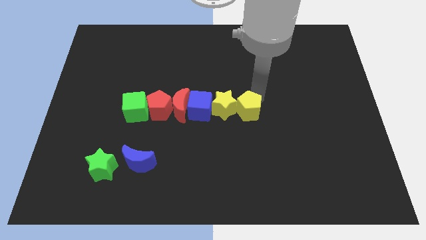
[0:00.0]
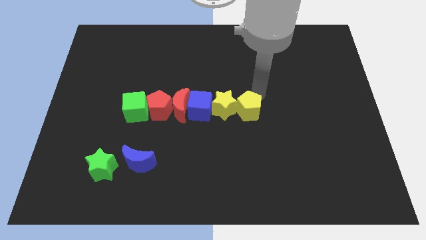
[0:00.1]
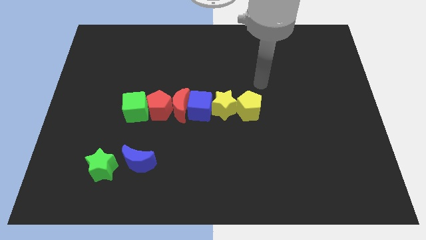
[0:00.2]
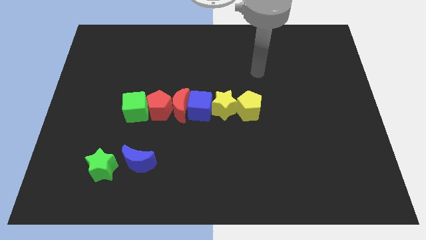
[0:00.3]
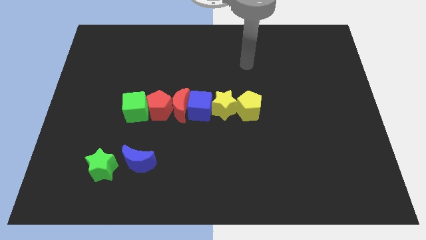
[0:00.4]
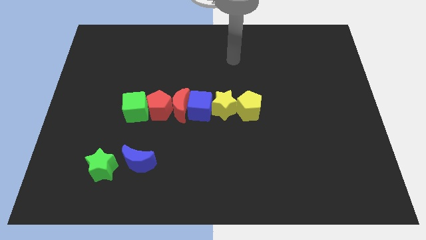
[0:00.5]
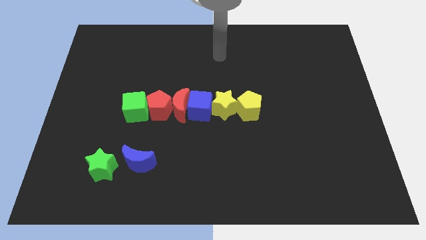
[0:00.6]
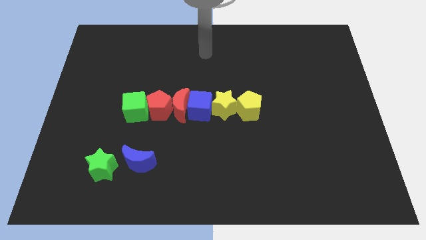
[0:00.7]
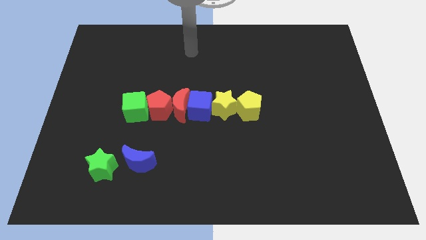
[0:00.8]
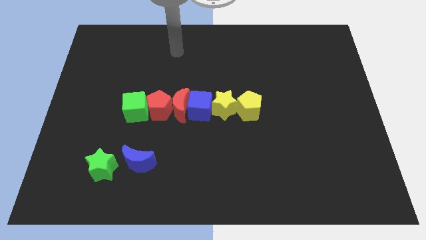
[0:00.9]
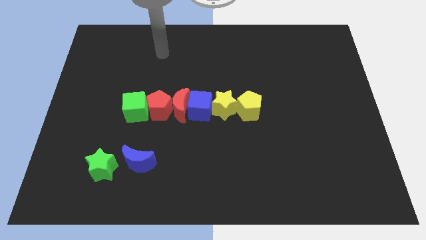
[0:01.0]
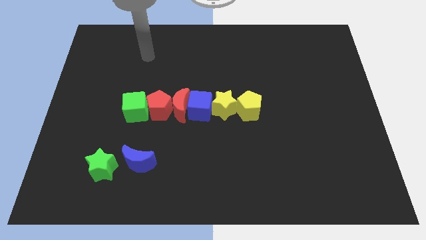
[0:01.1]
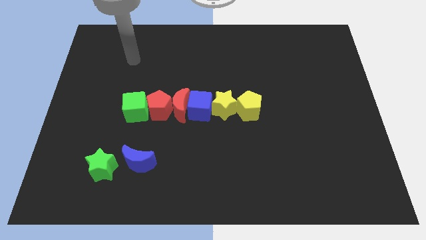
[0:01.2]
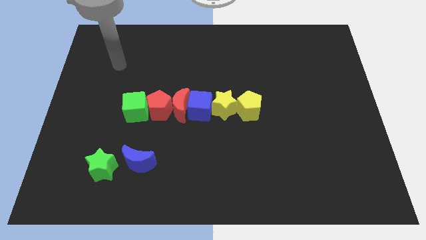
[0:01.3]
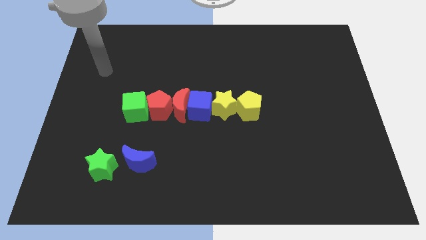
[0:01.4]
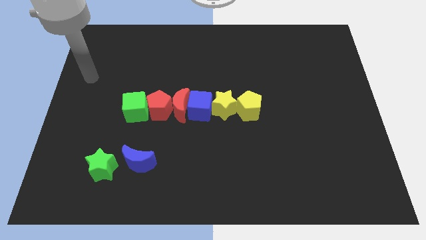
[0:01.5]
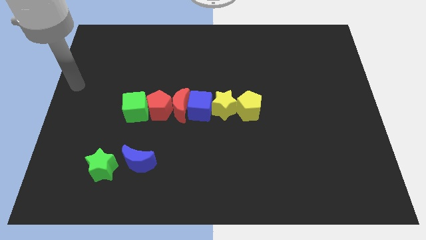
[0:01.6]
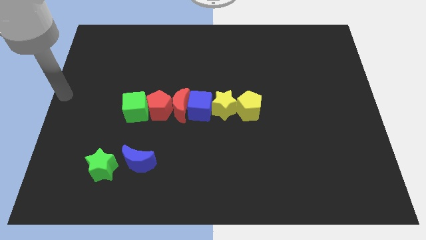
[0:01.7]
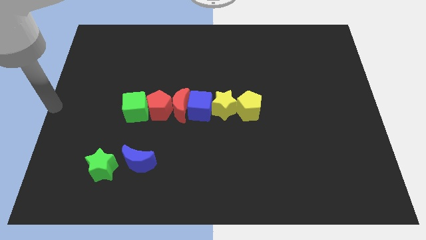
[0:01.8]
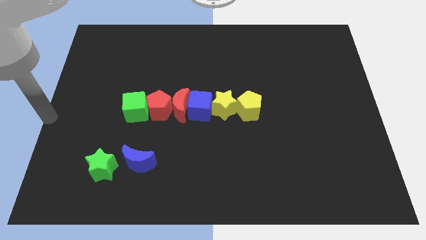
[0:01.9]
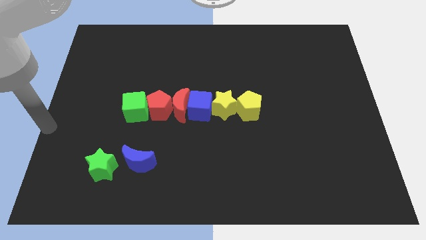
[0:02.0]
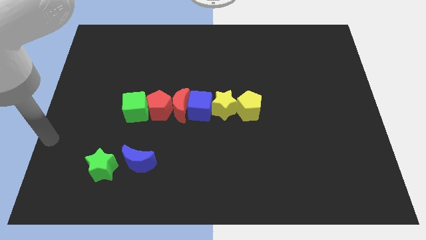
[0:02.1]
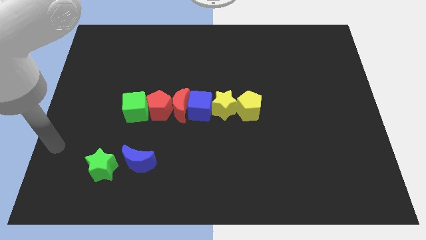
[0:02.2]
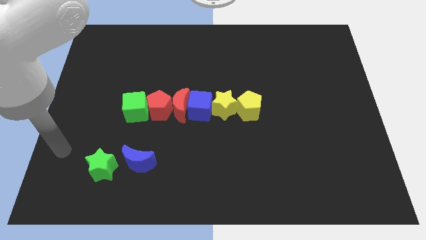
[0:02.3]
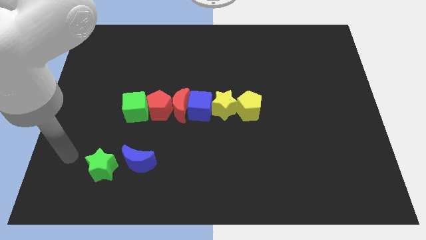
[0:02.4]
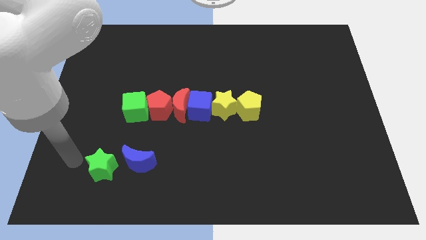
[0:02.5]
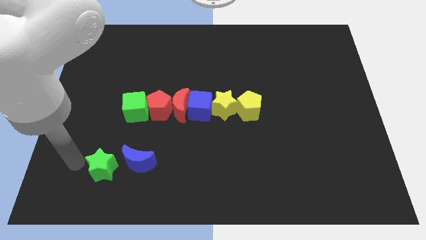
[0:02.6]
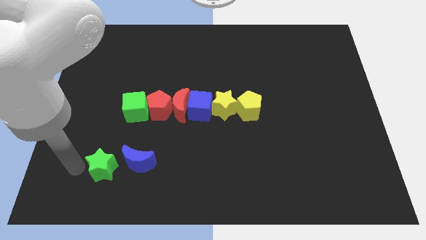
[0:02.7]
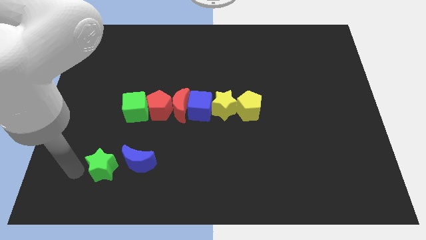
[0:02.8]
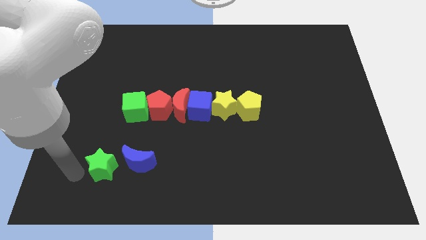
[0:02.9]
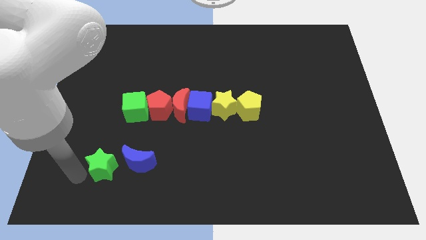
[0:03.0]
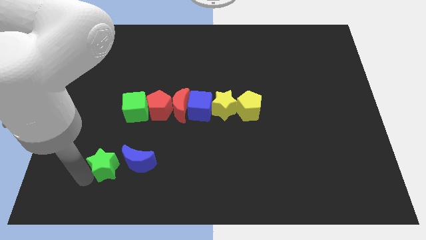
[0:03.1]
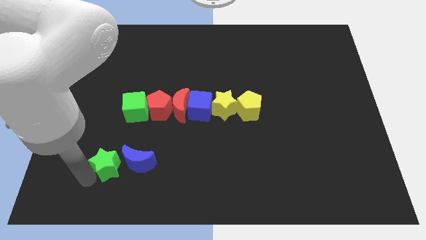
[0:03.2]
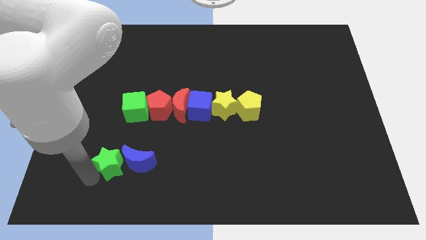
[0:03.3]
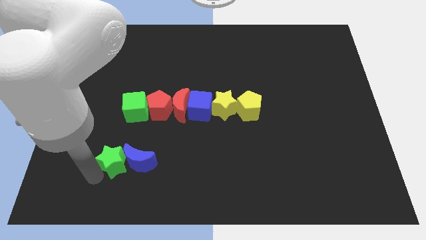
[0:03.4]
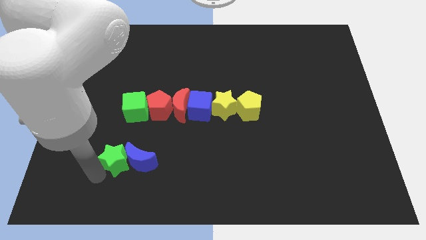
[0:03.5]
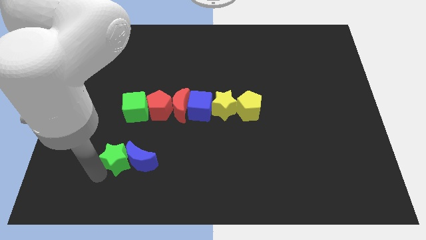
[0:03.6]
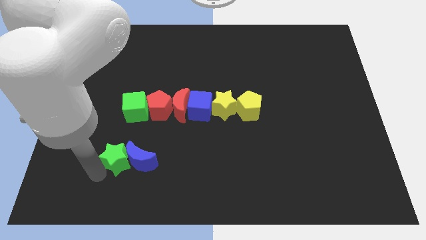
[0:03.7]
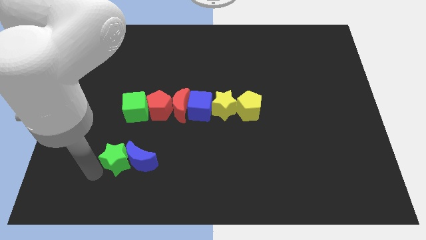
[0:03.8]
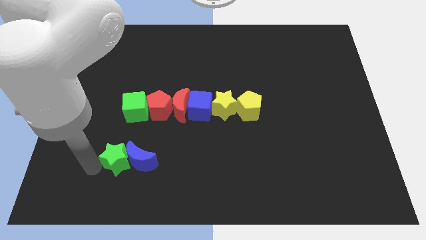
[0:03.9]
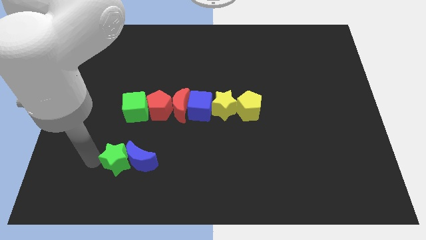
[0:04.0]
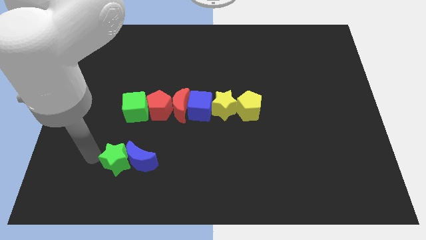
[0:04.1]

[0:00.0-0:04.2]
move the green star into the left side of the blue crescent

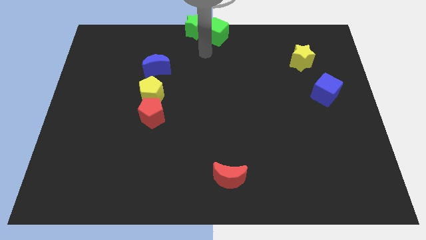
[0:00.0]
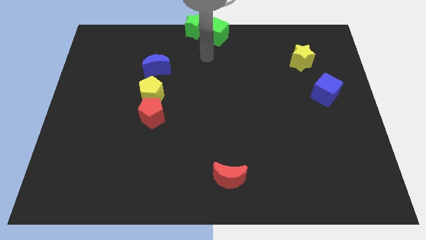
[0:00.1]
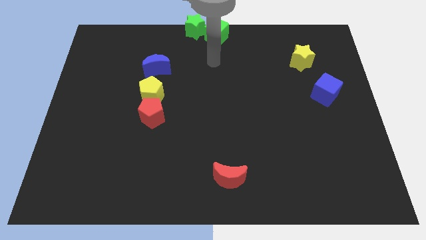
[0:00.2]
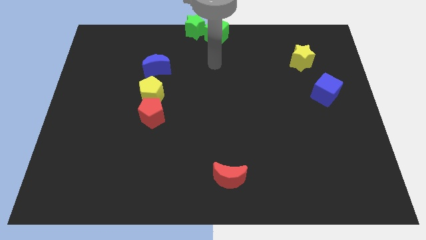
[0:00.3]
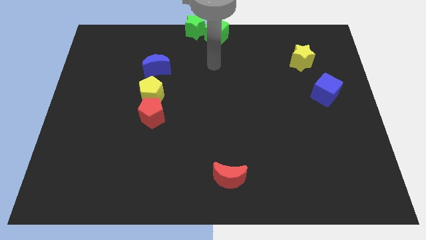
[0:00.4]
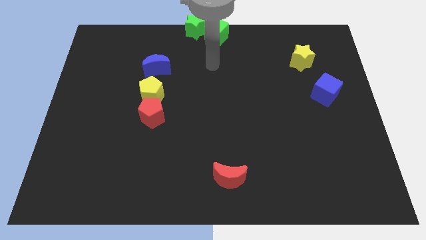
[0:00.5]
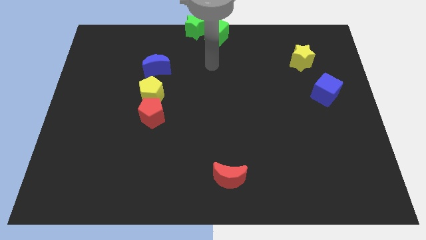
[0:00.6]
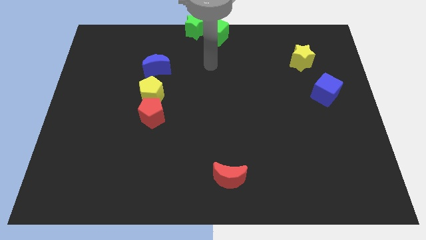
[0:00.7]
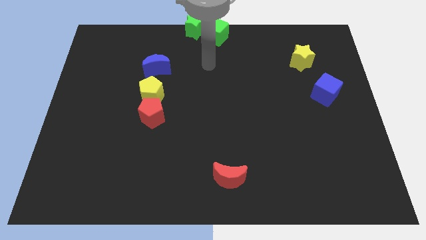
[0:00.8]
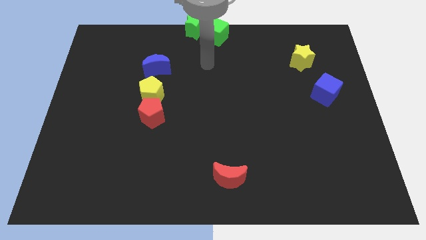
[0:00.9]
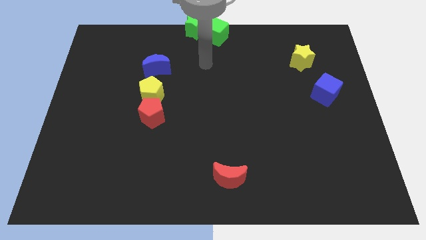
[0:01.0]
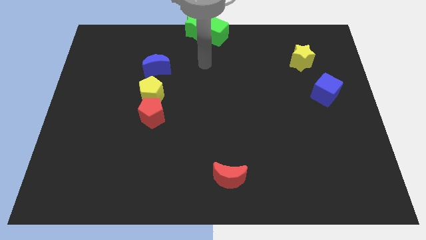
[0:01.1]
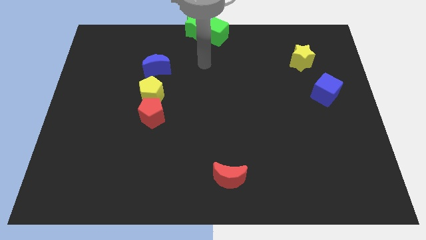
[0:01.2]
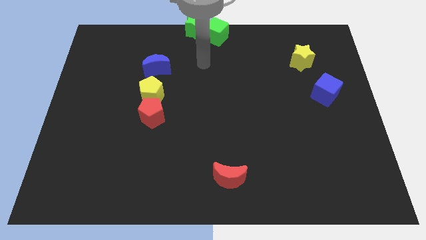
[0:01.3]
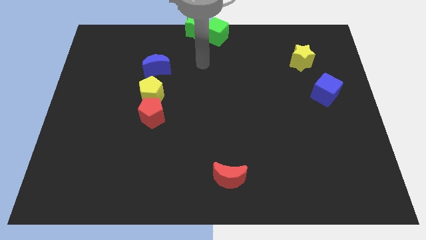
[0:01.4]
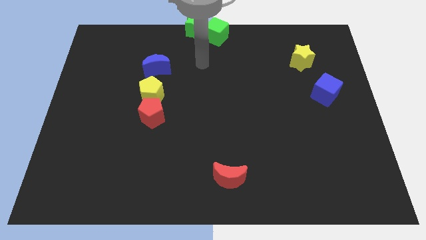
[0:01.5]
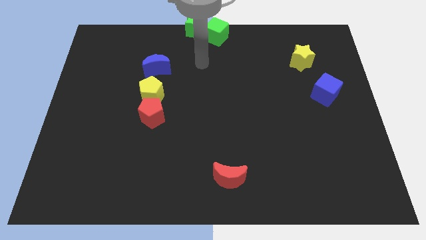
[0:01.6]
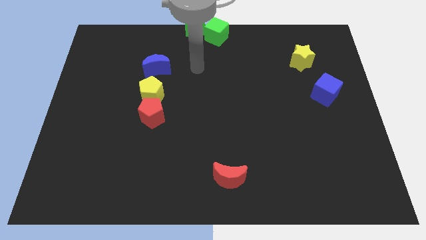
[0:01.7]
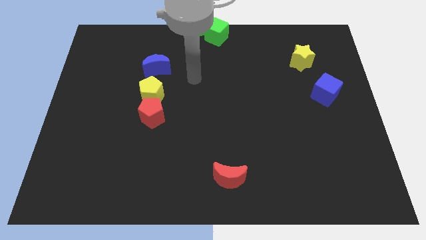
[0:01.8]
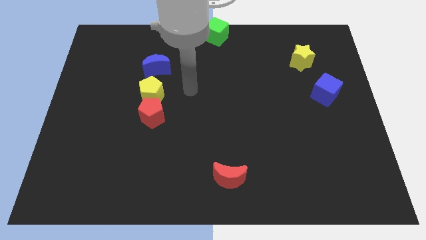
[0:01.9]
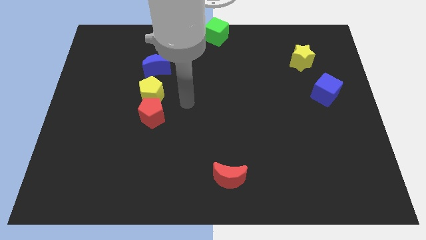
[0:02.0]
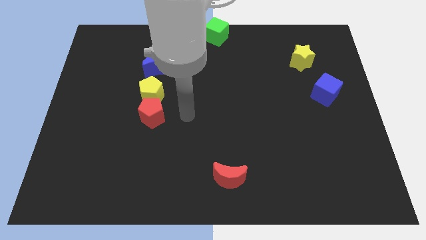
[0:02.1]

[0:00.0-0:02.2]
point your hand right to the red pentagon

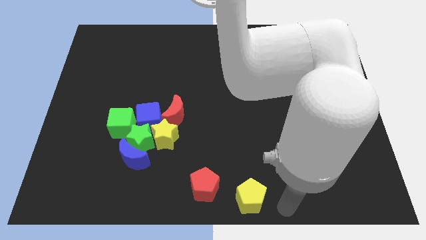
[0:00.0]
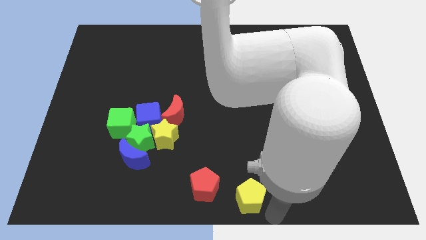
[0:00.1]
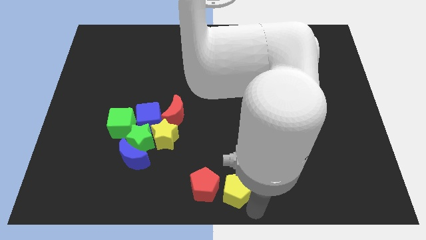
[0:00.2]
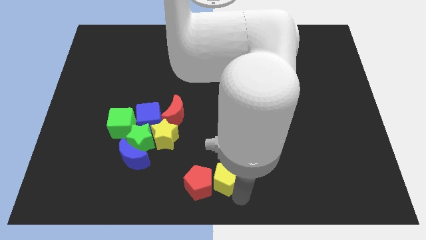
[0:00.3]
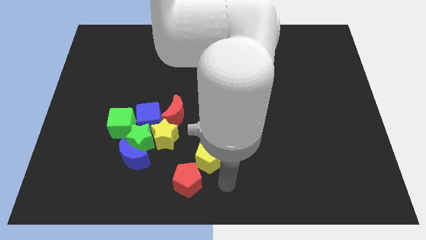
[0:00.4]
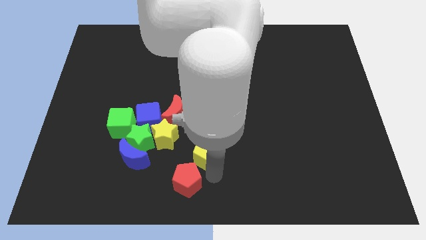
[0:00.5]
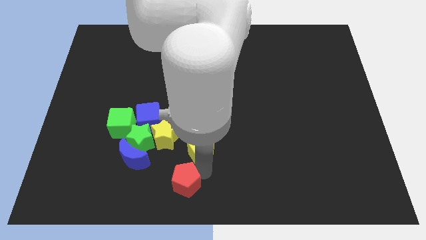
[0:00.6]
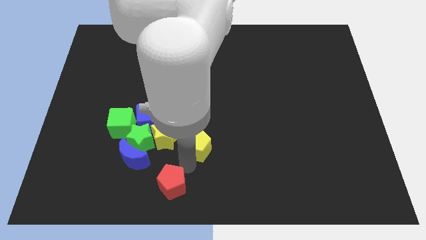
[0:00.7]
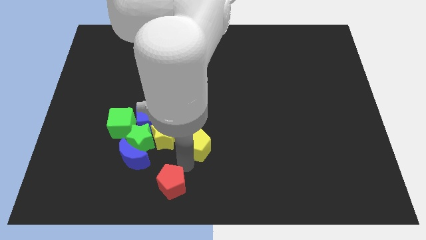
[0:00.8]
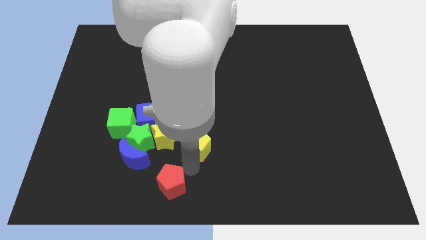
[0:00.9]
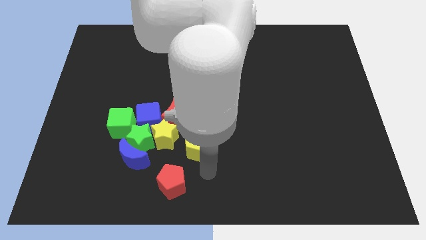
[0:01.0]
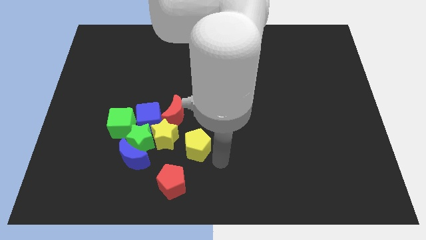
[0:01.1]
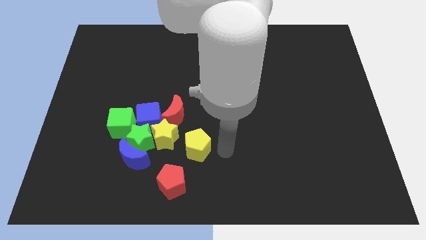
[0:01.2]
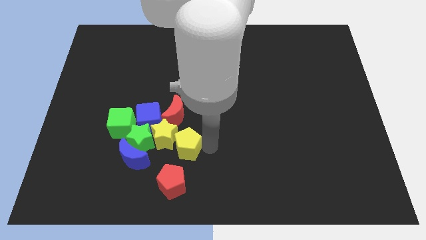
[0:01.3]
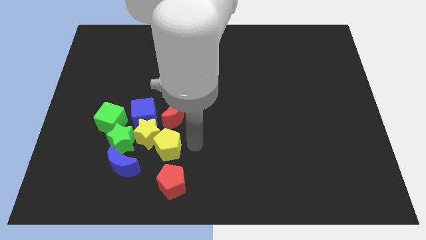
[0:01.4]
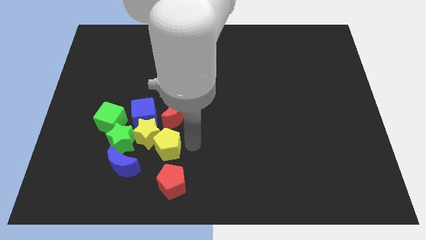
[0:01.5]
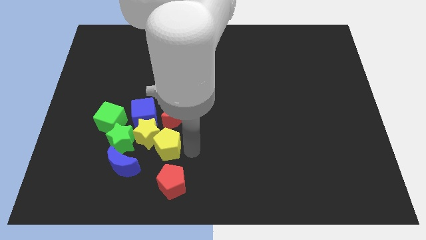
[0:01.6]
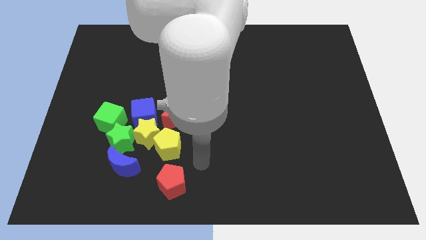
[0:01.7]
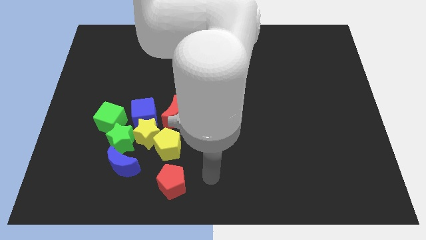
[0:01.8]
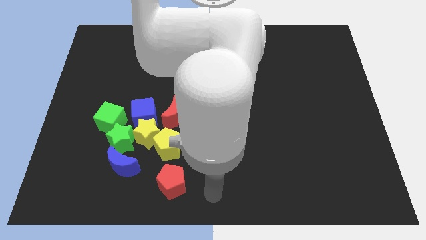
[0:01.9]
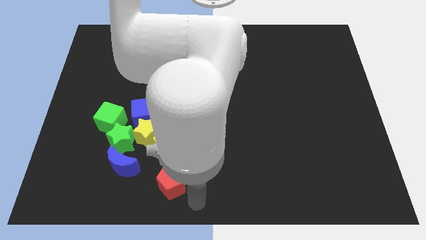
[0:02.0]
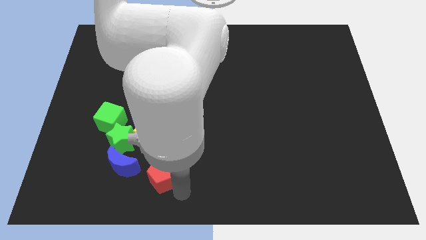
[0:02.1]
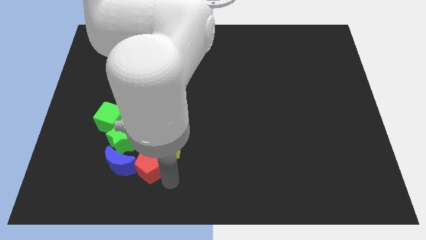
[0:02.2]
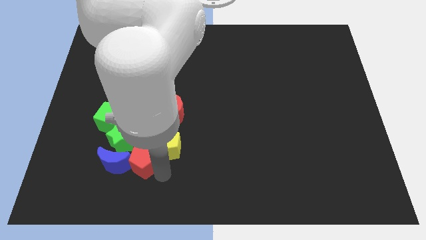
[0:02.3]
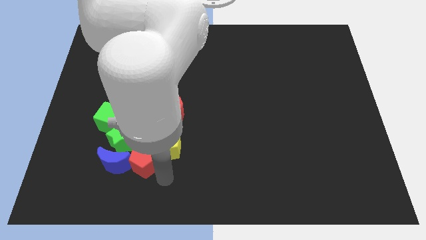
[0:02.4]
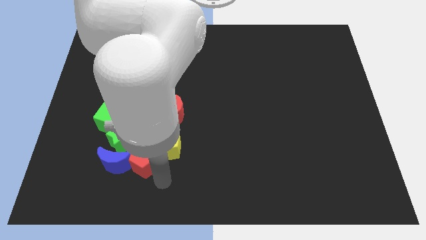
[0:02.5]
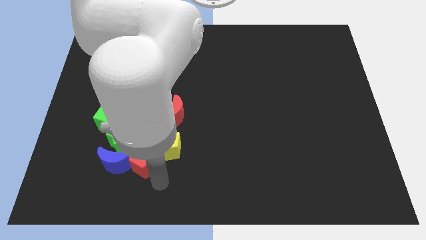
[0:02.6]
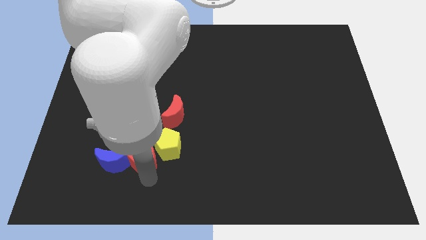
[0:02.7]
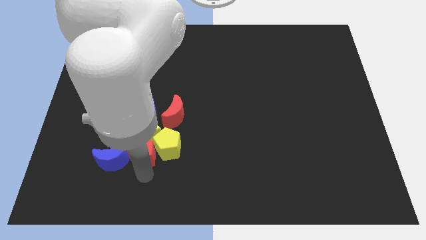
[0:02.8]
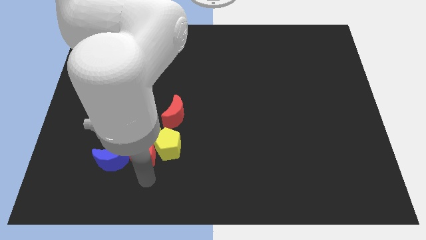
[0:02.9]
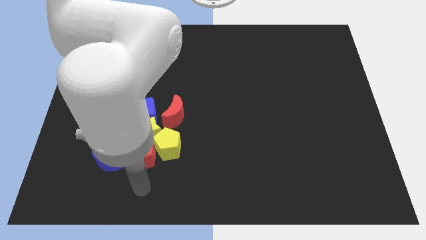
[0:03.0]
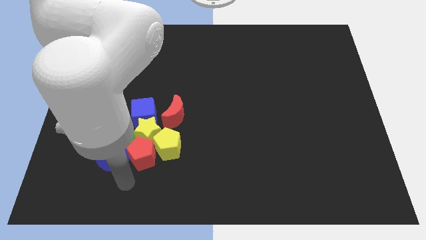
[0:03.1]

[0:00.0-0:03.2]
move the red pentagon towards the group of blocks
